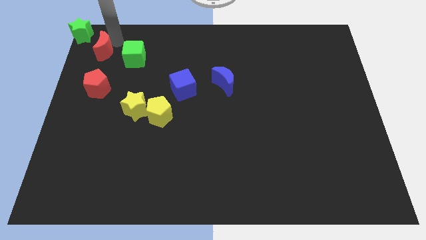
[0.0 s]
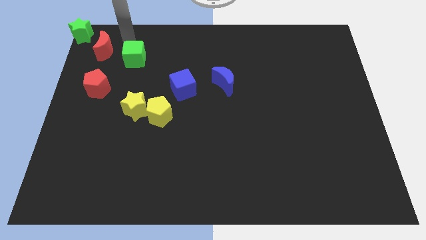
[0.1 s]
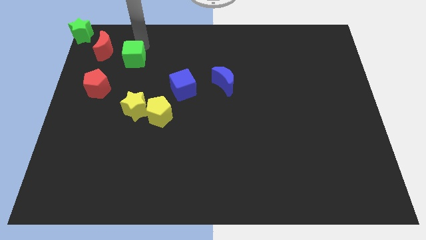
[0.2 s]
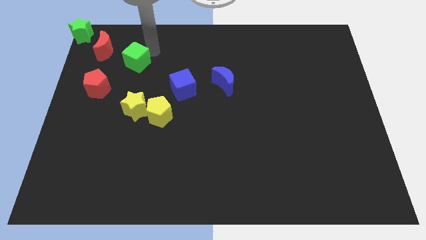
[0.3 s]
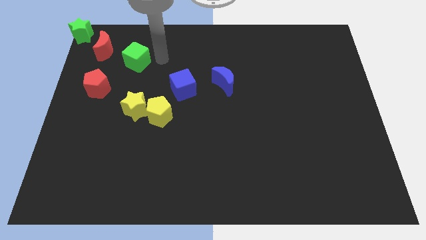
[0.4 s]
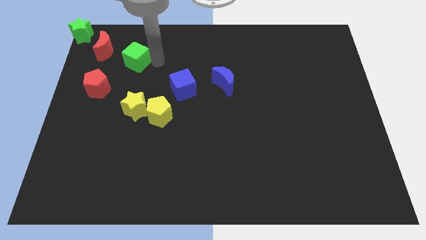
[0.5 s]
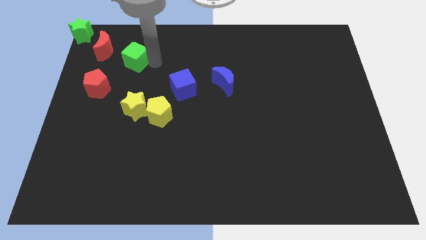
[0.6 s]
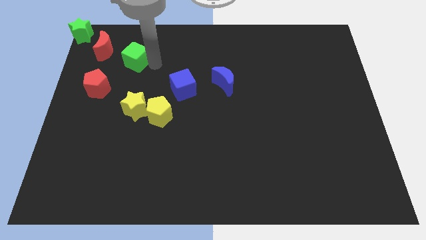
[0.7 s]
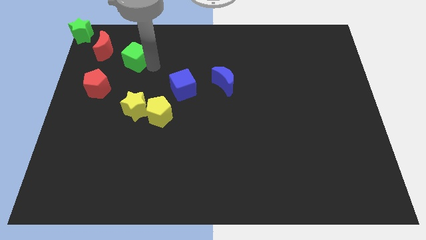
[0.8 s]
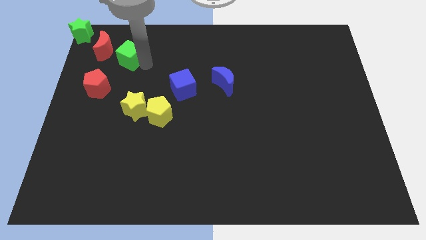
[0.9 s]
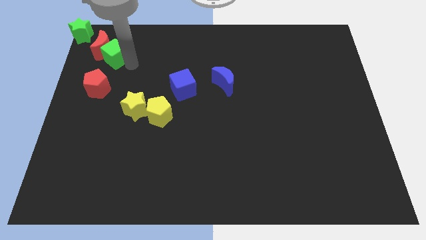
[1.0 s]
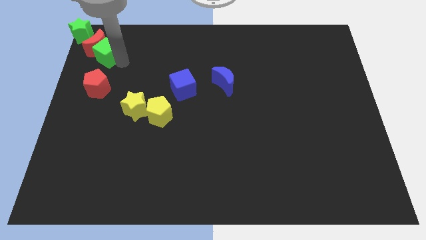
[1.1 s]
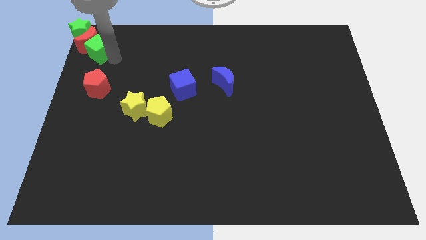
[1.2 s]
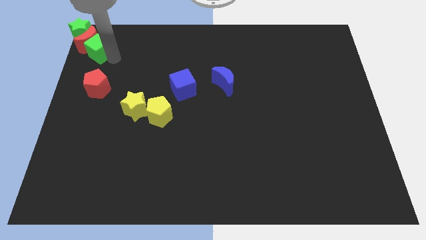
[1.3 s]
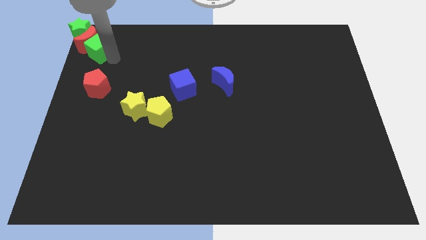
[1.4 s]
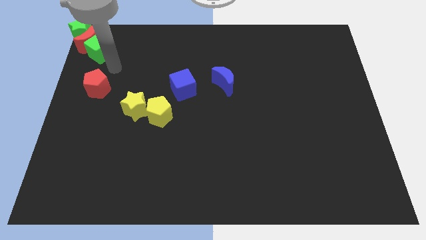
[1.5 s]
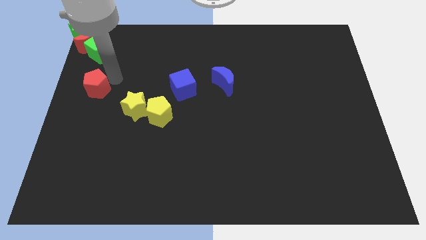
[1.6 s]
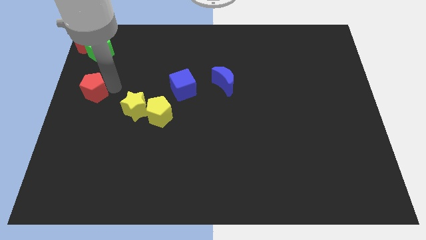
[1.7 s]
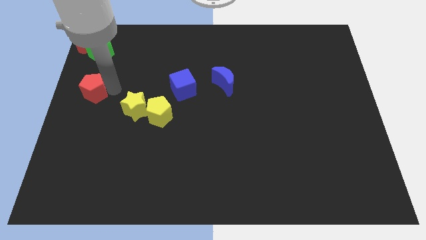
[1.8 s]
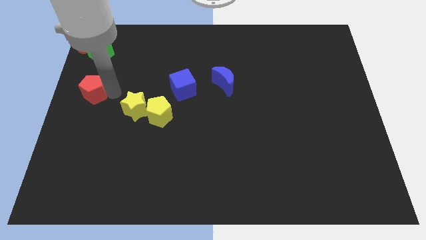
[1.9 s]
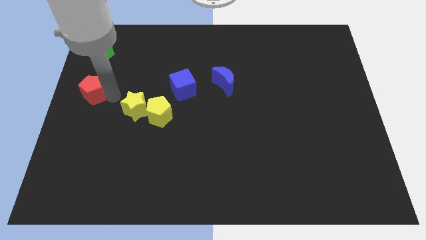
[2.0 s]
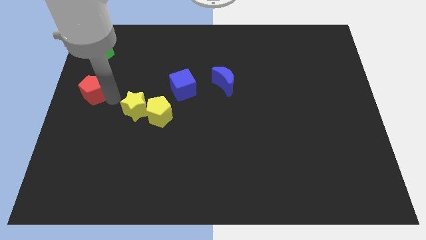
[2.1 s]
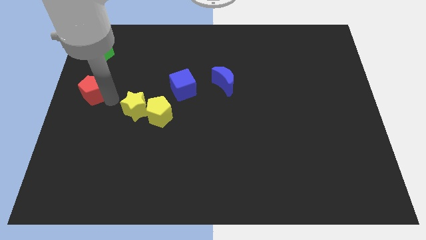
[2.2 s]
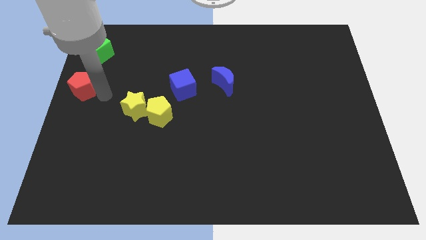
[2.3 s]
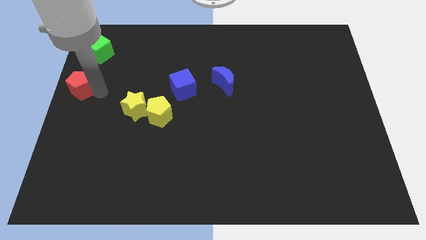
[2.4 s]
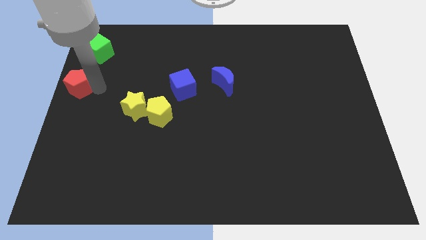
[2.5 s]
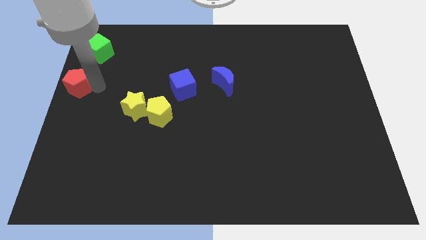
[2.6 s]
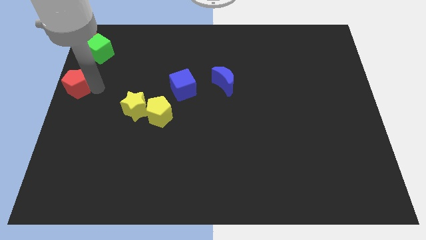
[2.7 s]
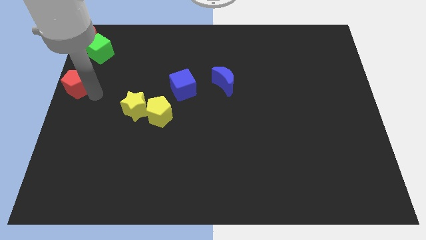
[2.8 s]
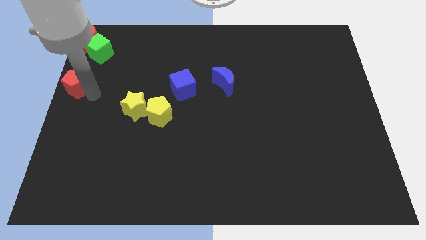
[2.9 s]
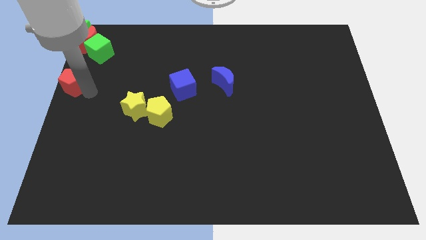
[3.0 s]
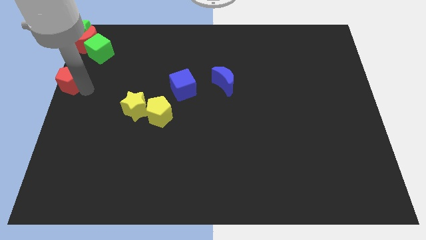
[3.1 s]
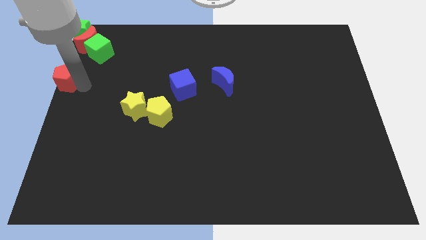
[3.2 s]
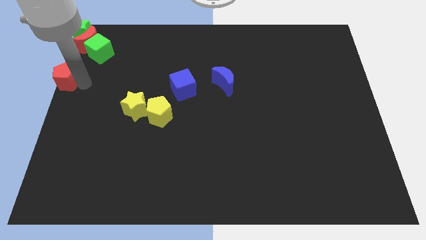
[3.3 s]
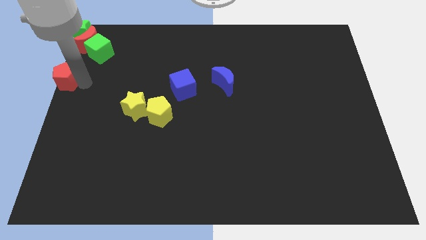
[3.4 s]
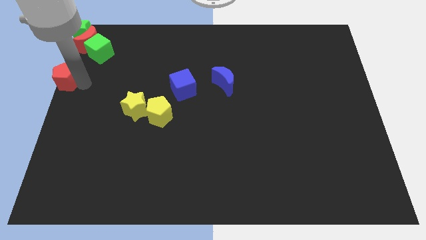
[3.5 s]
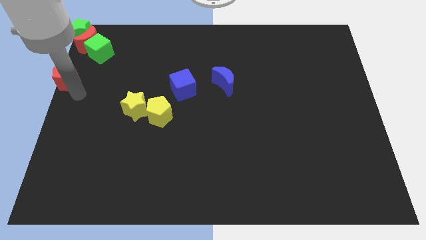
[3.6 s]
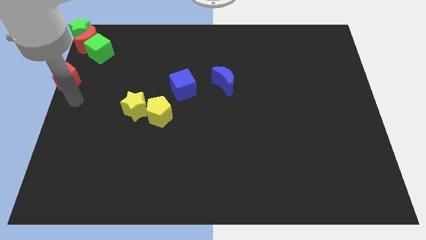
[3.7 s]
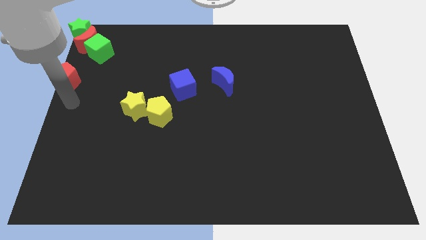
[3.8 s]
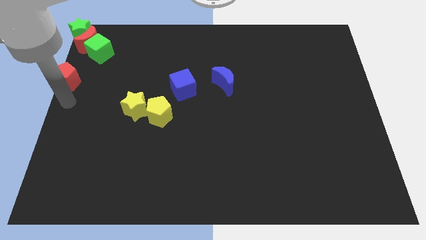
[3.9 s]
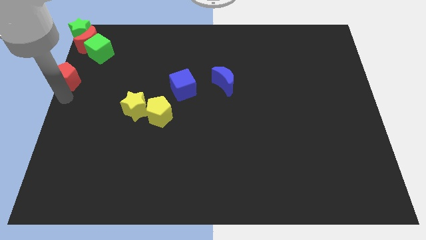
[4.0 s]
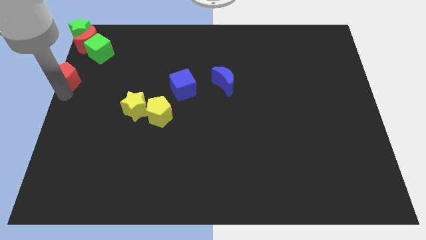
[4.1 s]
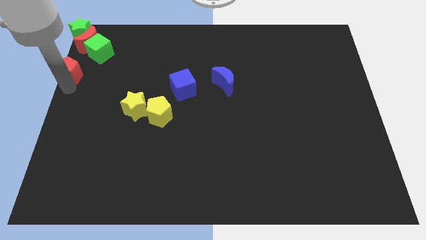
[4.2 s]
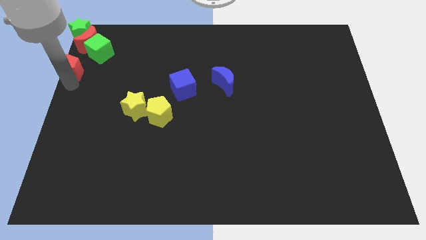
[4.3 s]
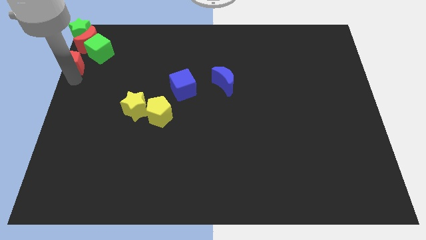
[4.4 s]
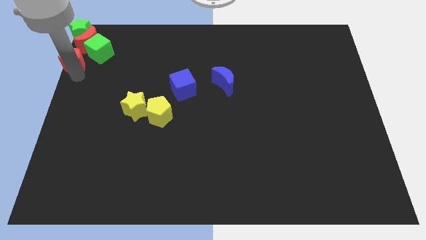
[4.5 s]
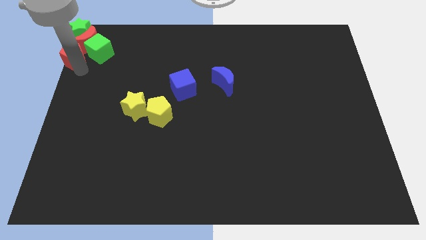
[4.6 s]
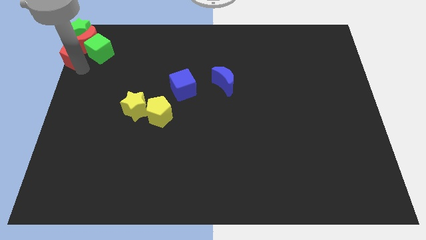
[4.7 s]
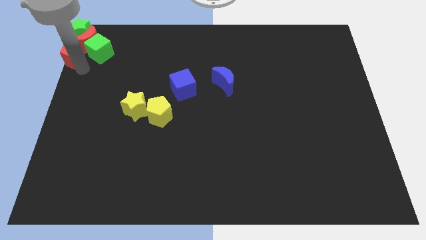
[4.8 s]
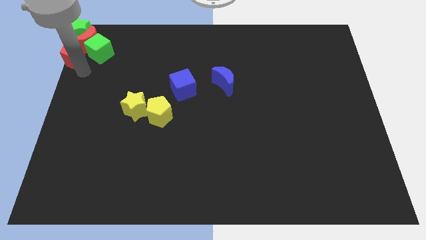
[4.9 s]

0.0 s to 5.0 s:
move the red pentagon into the red crescent

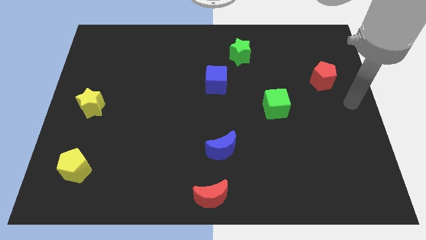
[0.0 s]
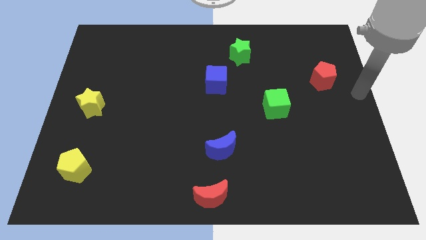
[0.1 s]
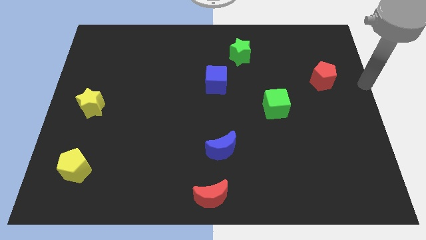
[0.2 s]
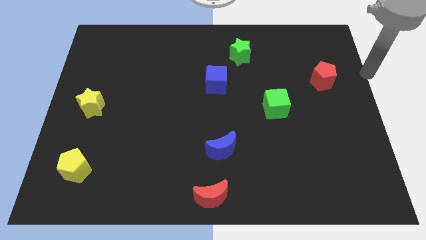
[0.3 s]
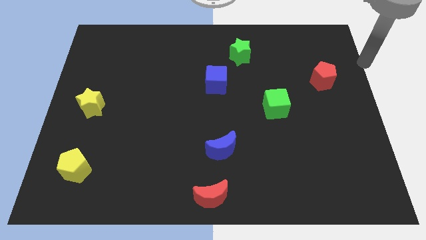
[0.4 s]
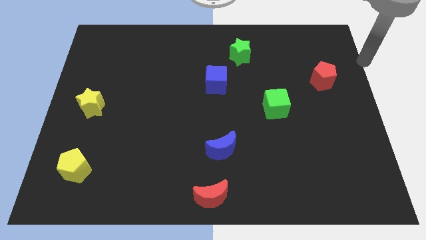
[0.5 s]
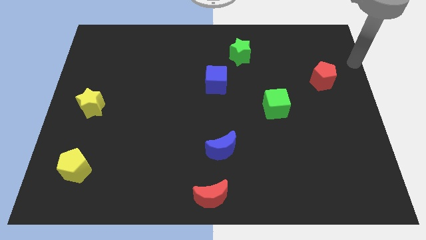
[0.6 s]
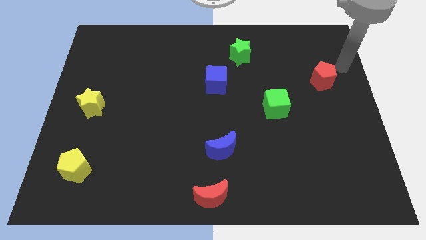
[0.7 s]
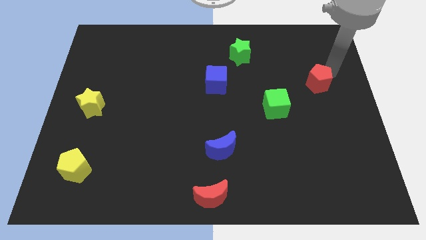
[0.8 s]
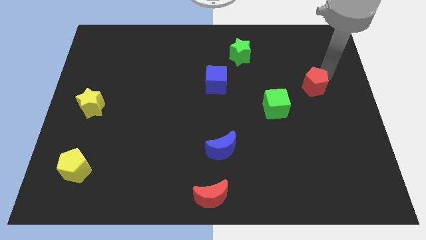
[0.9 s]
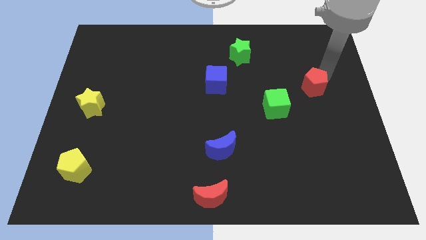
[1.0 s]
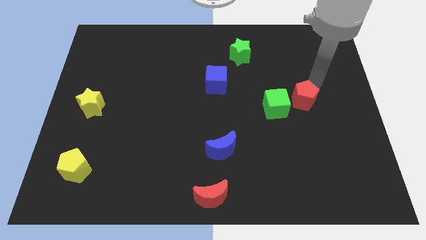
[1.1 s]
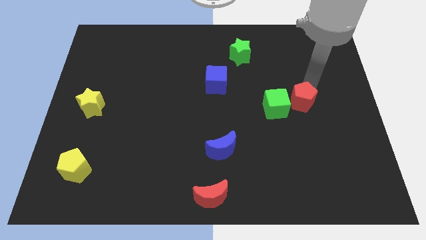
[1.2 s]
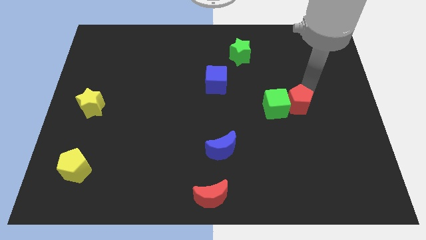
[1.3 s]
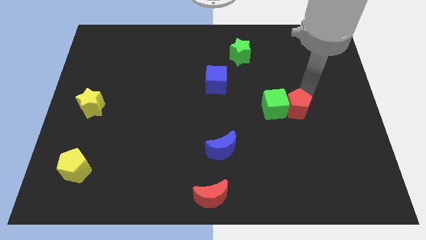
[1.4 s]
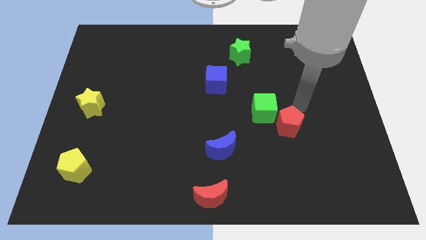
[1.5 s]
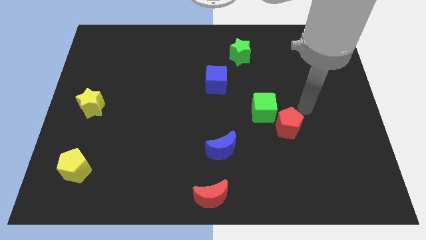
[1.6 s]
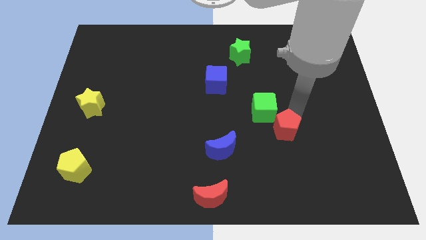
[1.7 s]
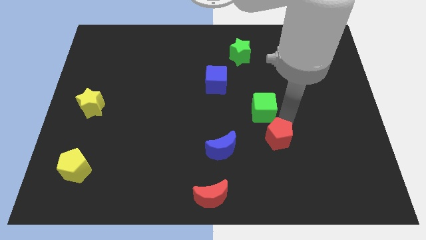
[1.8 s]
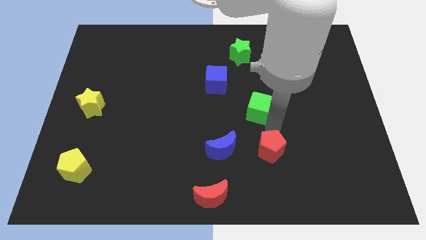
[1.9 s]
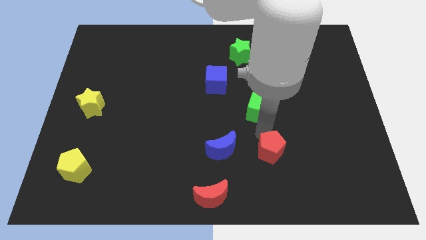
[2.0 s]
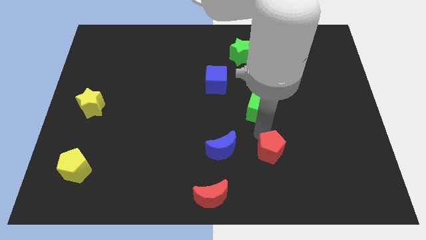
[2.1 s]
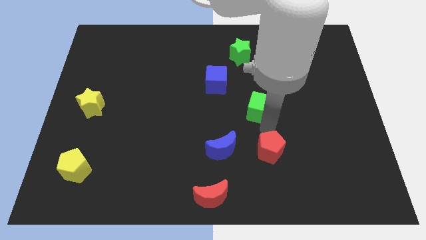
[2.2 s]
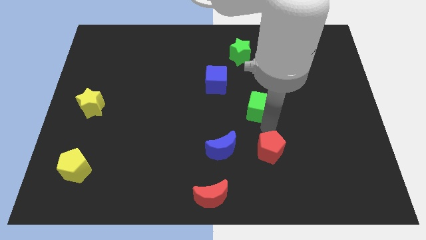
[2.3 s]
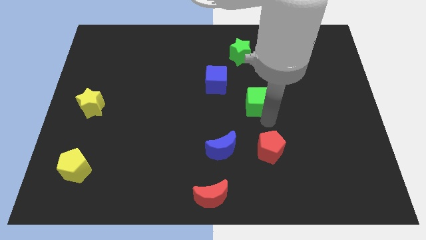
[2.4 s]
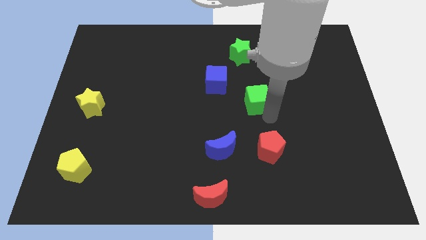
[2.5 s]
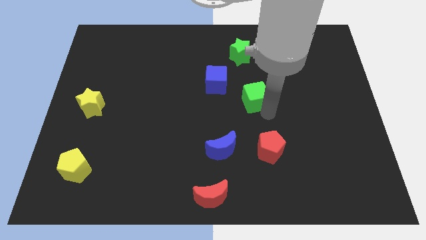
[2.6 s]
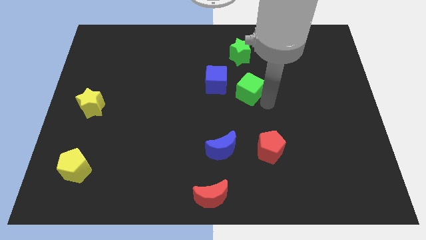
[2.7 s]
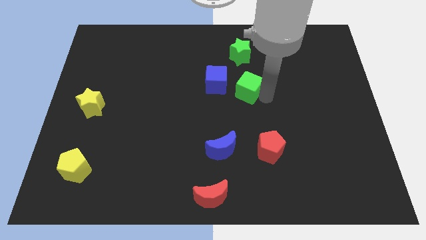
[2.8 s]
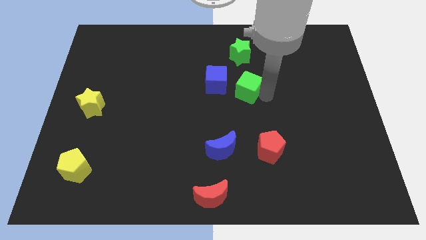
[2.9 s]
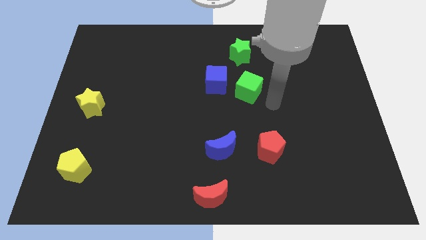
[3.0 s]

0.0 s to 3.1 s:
slide the red pentagon towards the right side of the blue crescent

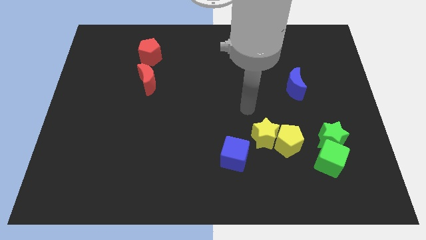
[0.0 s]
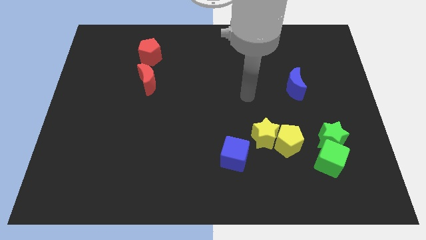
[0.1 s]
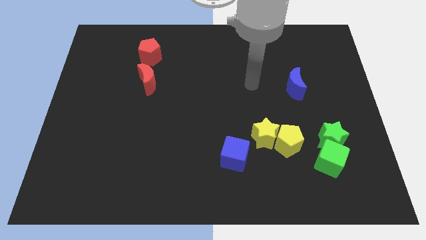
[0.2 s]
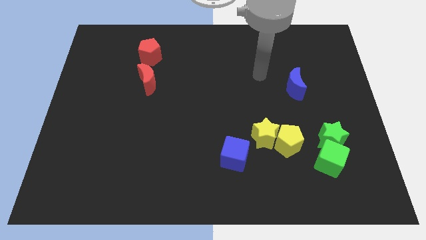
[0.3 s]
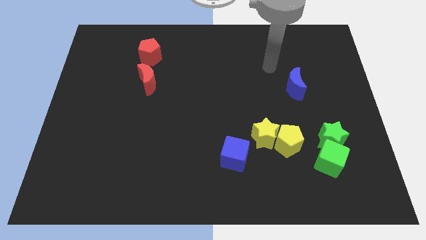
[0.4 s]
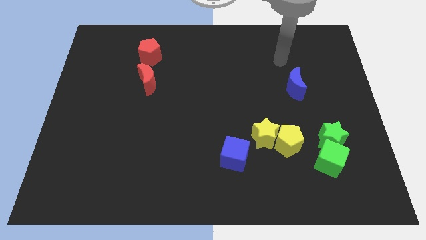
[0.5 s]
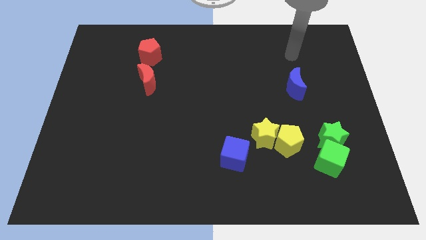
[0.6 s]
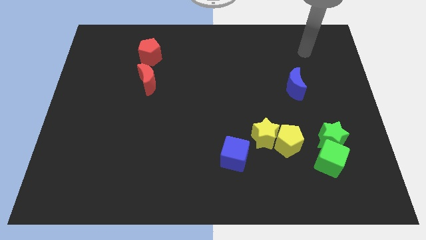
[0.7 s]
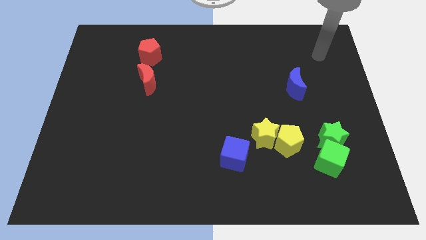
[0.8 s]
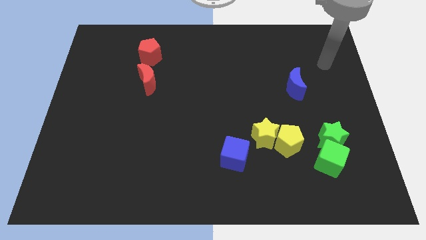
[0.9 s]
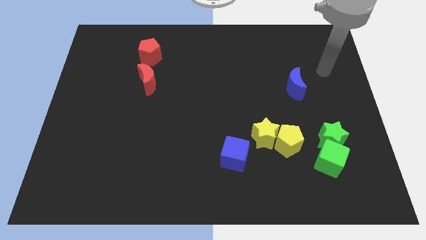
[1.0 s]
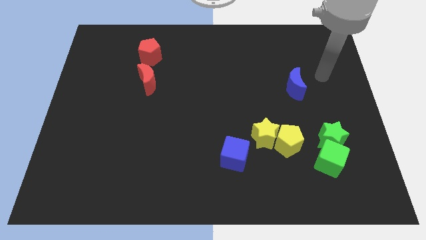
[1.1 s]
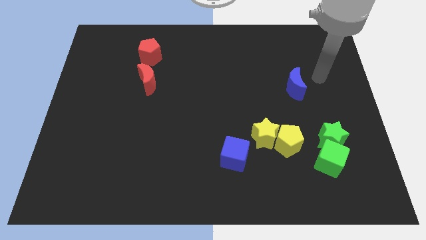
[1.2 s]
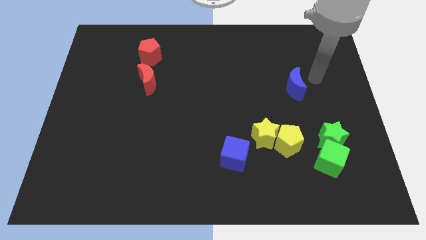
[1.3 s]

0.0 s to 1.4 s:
move your arm from the yellow star to the right of the blue crescent
